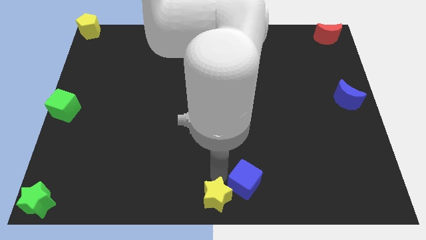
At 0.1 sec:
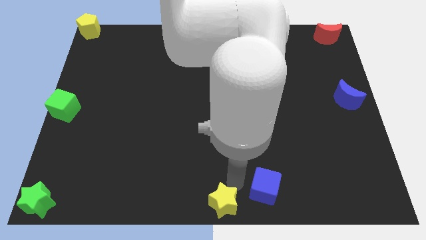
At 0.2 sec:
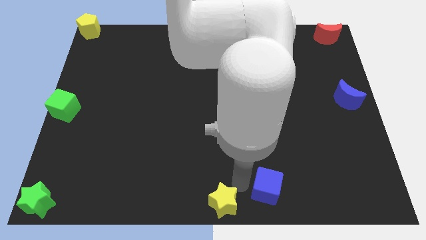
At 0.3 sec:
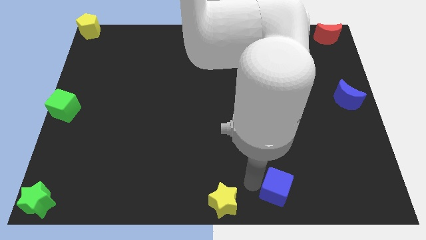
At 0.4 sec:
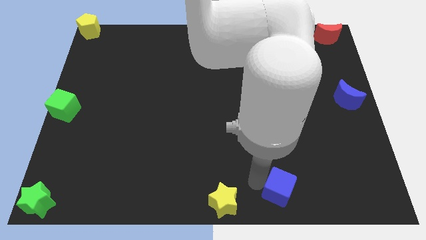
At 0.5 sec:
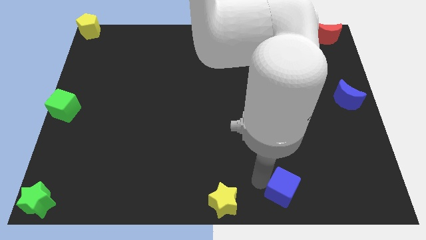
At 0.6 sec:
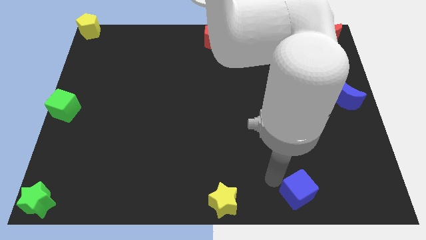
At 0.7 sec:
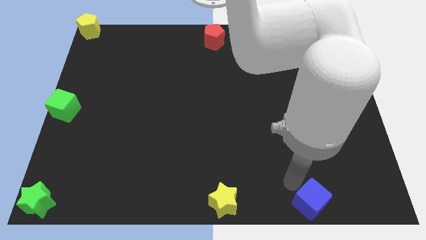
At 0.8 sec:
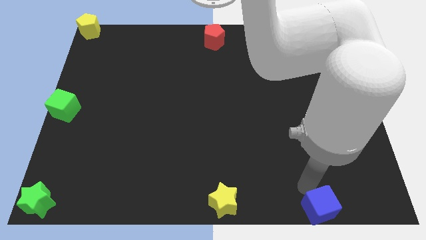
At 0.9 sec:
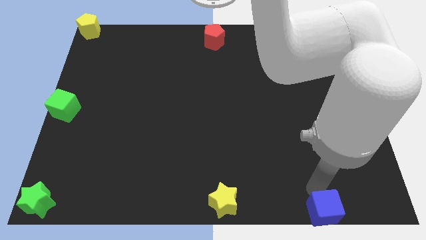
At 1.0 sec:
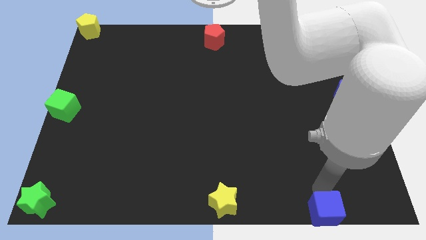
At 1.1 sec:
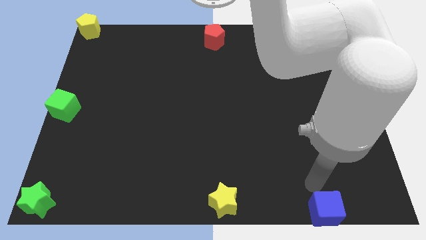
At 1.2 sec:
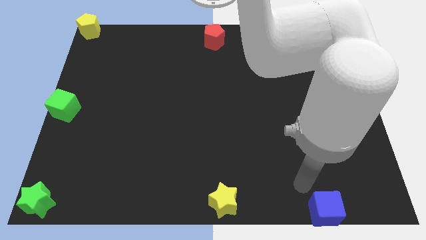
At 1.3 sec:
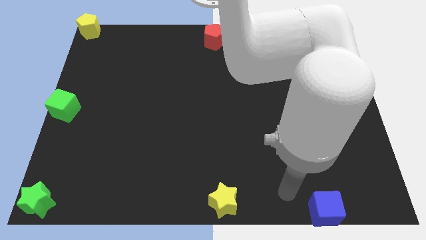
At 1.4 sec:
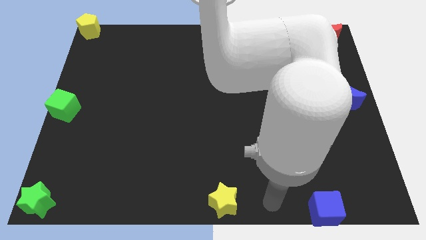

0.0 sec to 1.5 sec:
push the blue cube to the bottom right

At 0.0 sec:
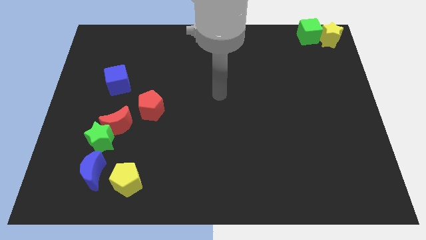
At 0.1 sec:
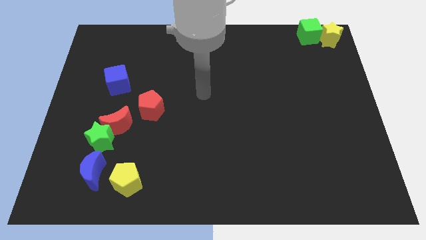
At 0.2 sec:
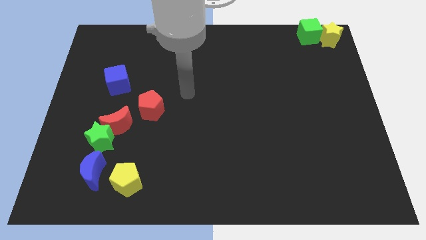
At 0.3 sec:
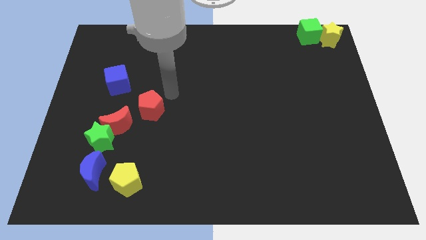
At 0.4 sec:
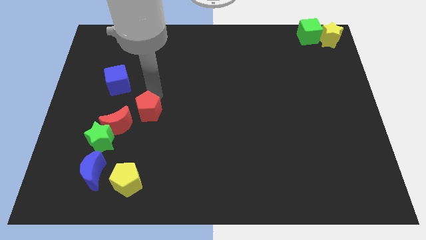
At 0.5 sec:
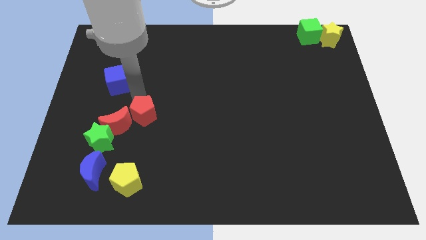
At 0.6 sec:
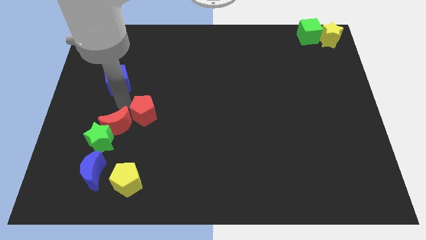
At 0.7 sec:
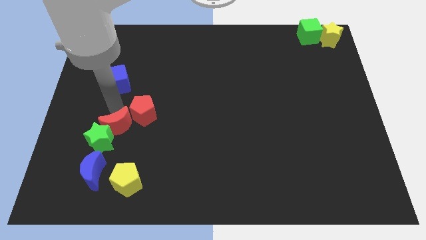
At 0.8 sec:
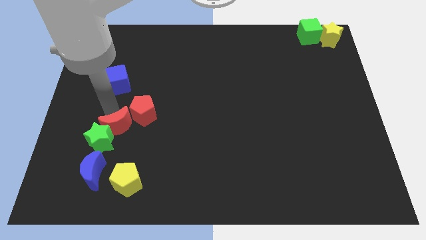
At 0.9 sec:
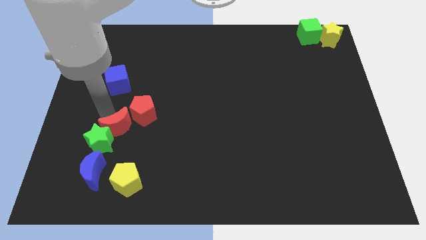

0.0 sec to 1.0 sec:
push the red pentagon into the red crescent

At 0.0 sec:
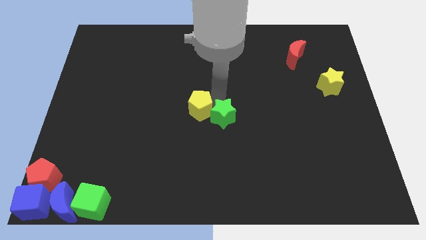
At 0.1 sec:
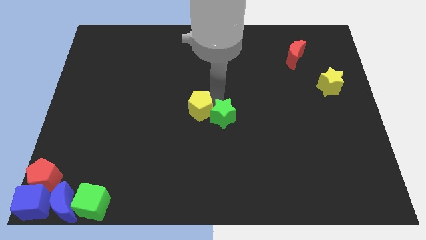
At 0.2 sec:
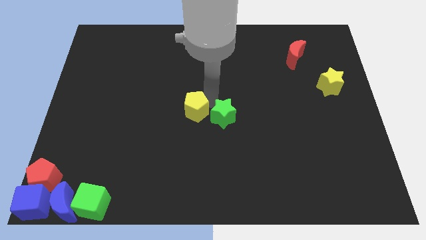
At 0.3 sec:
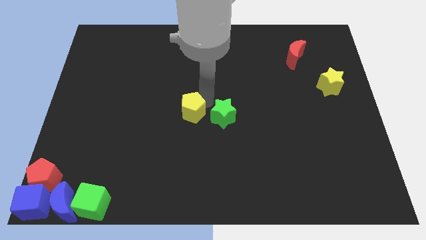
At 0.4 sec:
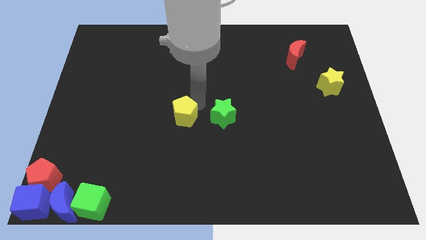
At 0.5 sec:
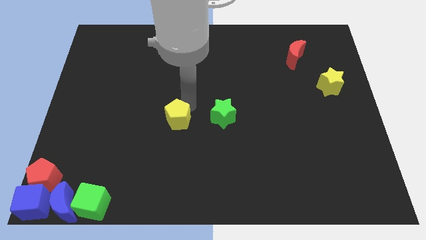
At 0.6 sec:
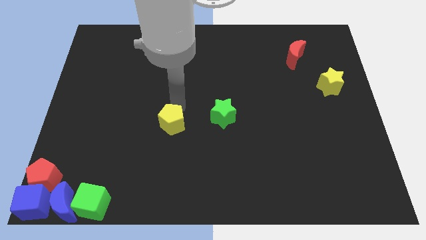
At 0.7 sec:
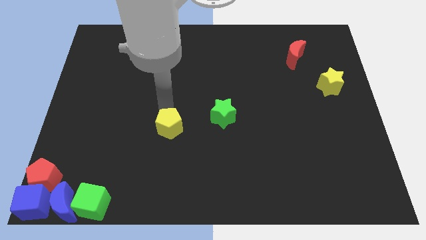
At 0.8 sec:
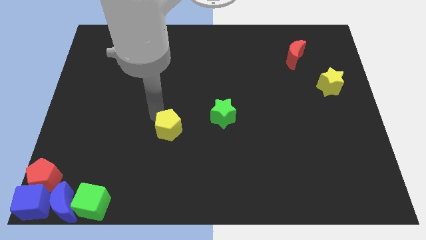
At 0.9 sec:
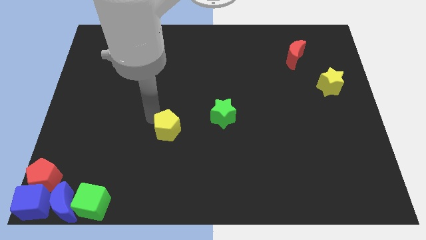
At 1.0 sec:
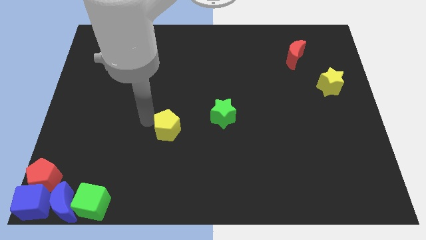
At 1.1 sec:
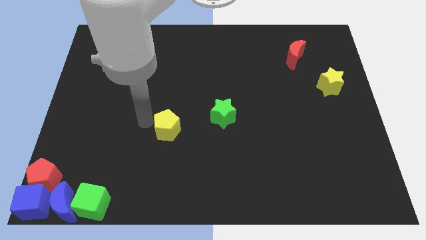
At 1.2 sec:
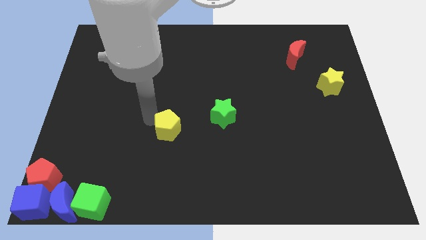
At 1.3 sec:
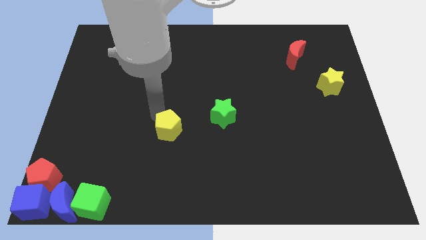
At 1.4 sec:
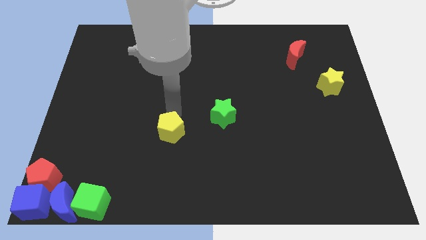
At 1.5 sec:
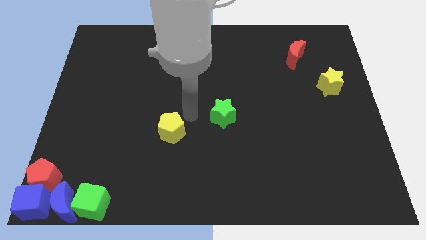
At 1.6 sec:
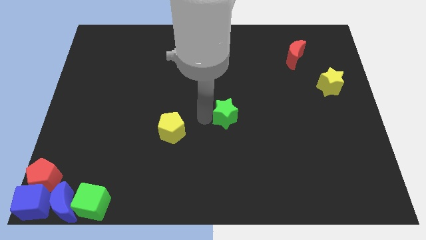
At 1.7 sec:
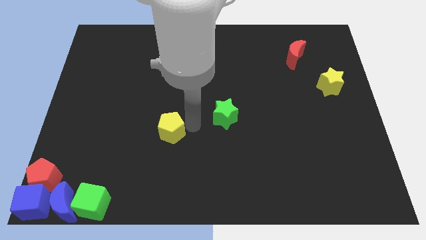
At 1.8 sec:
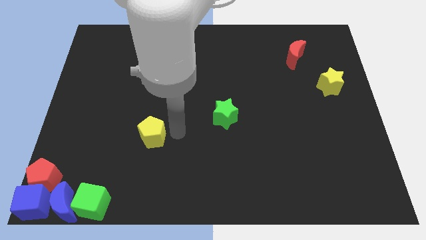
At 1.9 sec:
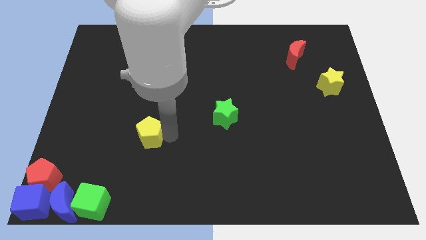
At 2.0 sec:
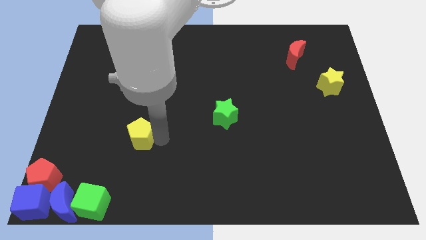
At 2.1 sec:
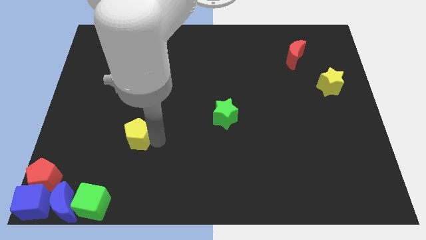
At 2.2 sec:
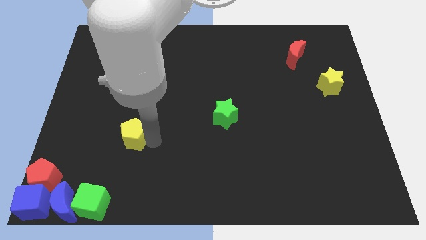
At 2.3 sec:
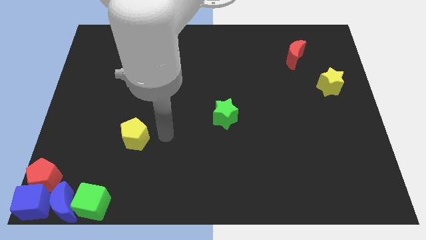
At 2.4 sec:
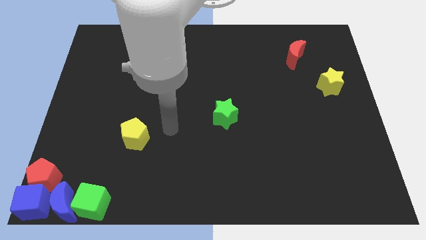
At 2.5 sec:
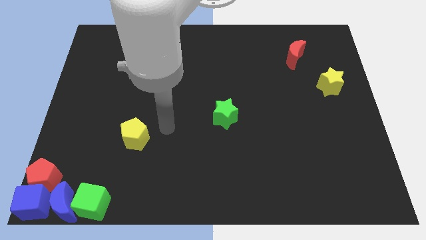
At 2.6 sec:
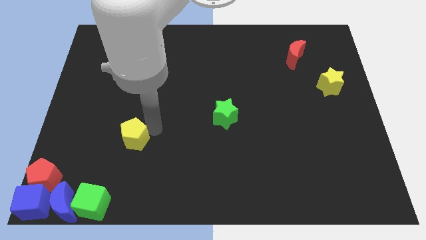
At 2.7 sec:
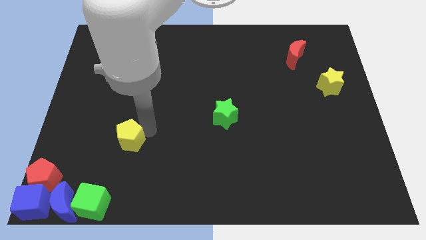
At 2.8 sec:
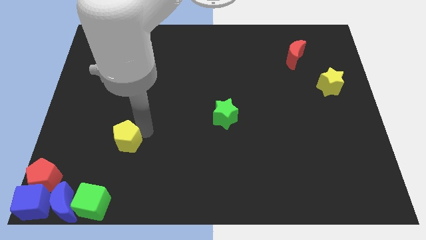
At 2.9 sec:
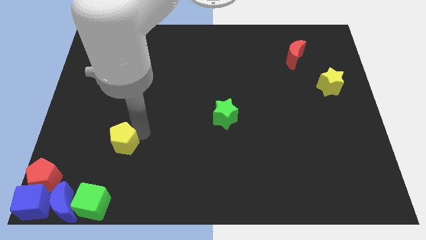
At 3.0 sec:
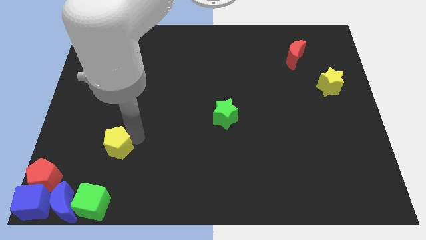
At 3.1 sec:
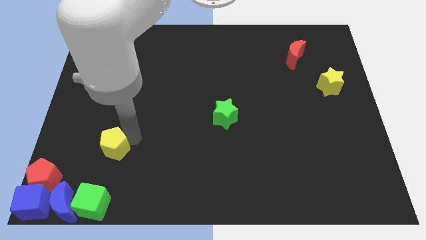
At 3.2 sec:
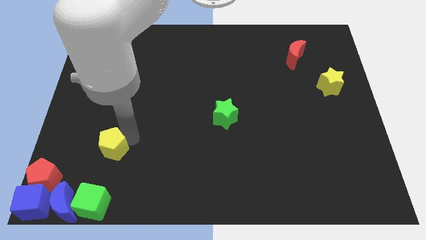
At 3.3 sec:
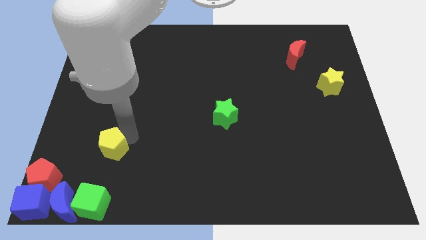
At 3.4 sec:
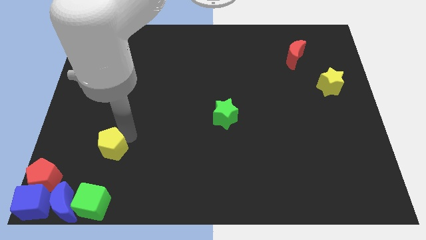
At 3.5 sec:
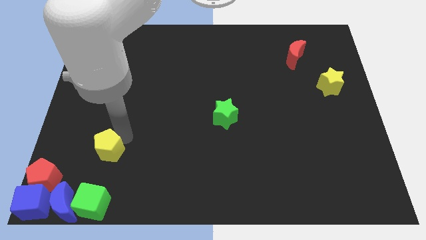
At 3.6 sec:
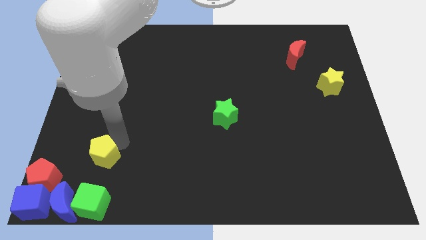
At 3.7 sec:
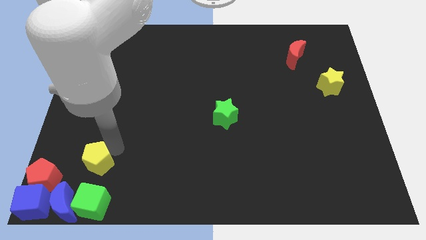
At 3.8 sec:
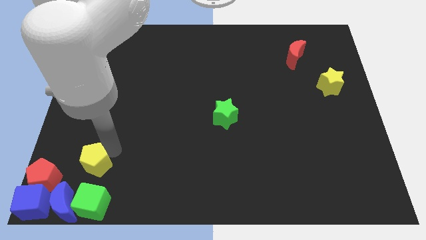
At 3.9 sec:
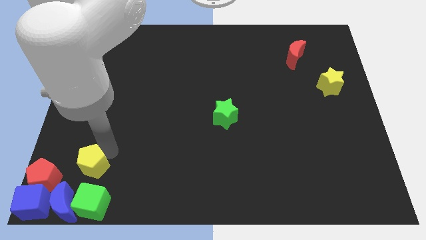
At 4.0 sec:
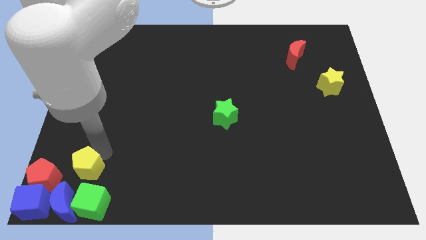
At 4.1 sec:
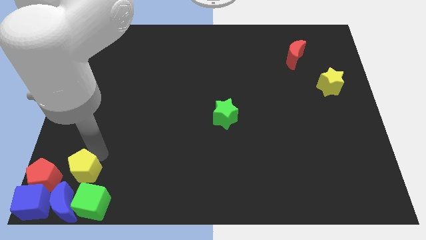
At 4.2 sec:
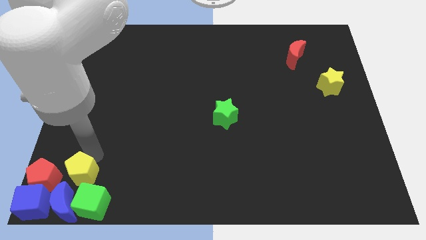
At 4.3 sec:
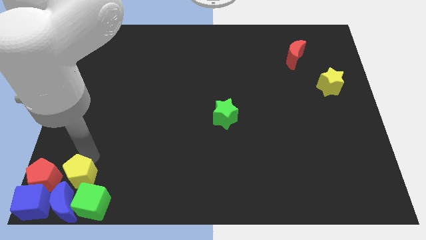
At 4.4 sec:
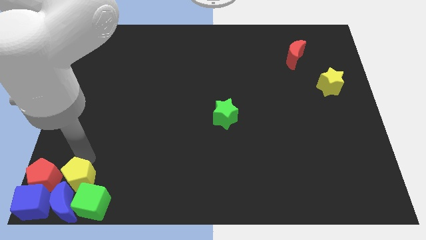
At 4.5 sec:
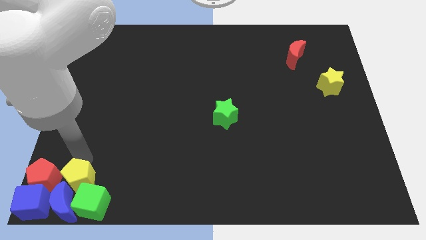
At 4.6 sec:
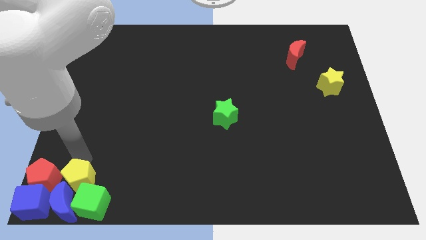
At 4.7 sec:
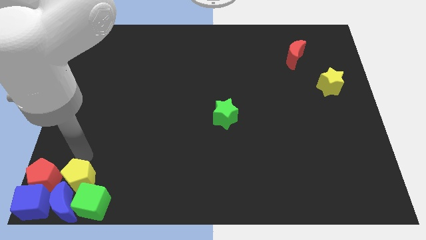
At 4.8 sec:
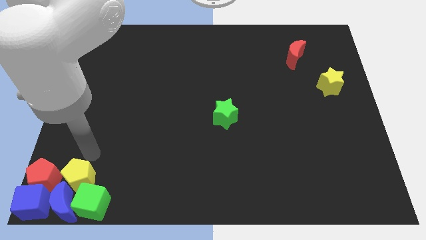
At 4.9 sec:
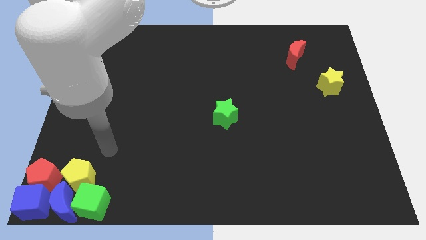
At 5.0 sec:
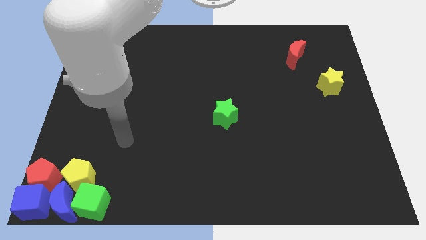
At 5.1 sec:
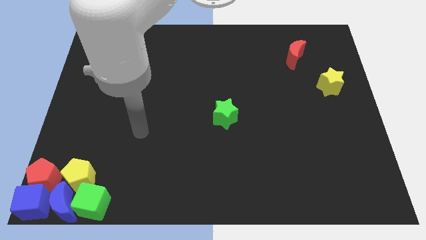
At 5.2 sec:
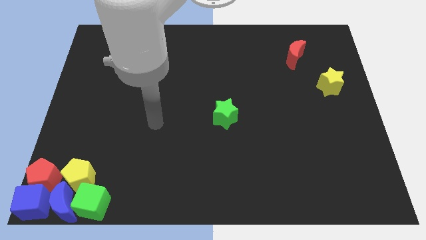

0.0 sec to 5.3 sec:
push the yellow pentagon towards the bottom left

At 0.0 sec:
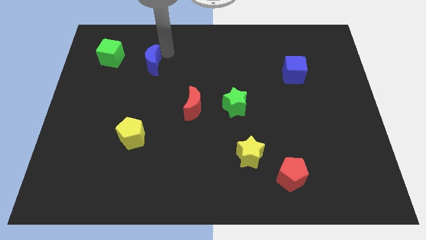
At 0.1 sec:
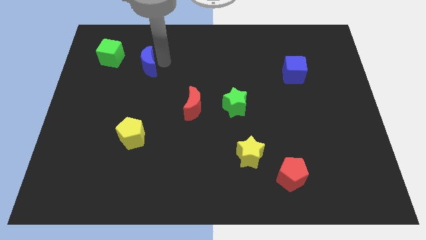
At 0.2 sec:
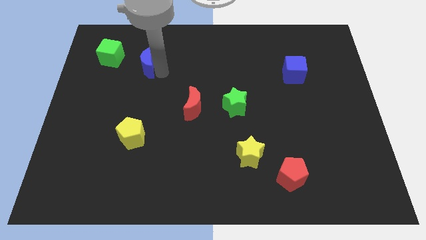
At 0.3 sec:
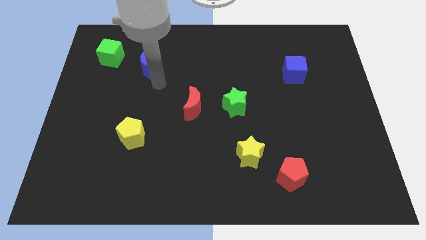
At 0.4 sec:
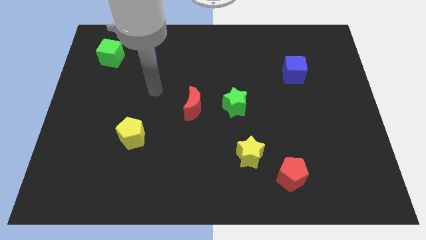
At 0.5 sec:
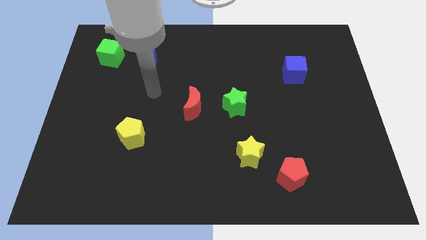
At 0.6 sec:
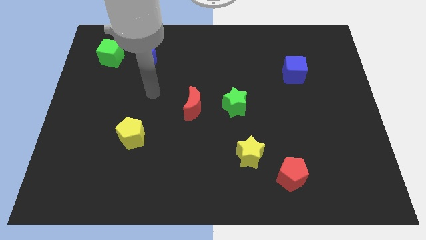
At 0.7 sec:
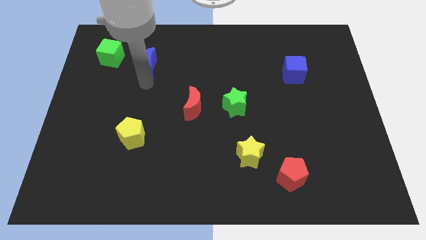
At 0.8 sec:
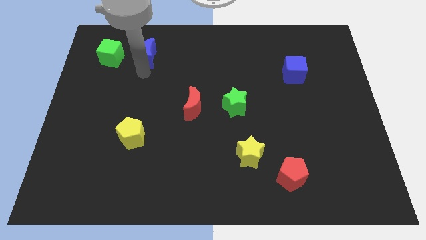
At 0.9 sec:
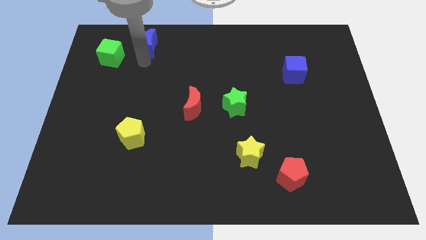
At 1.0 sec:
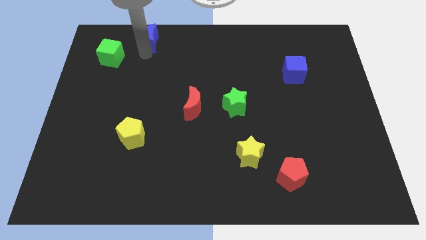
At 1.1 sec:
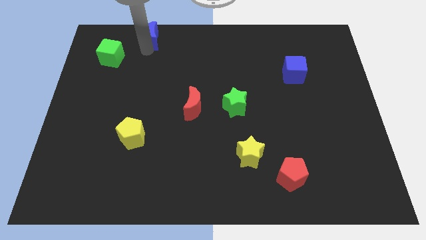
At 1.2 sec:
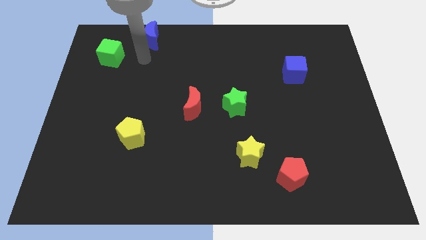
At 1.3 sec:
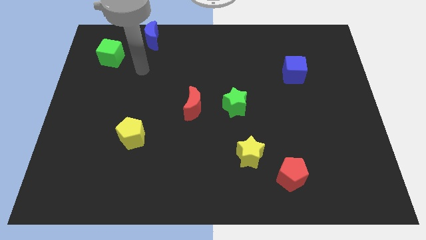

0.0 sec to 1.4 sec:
put the blue moon diagonally top right to the green cube
